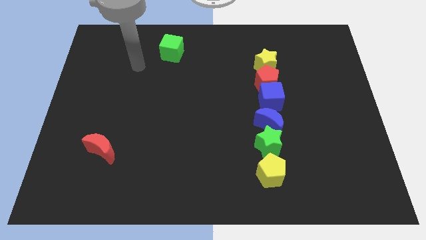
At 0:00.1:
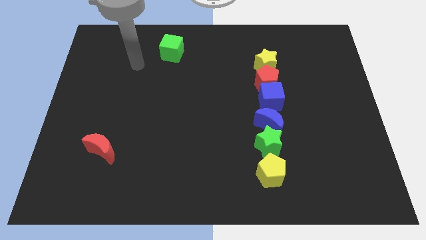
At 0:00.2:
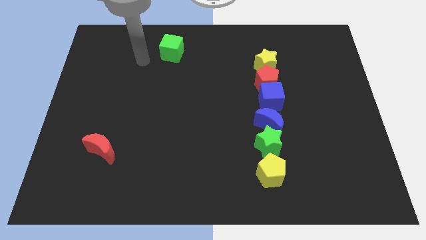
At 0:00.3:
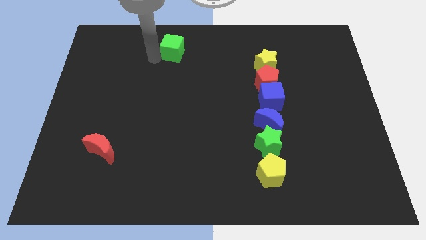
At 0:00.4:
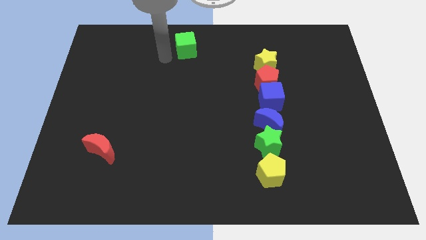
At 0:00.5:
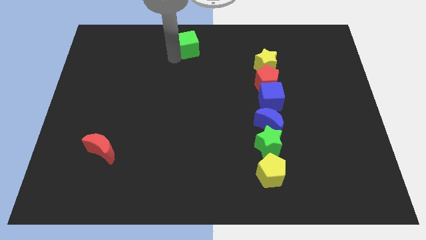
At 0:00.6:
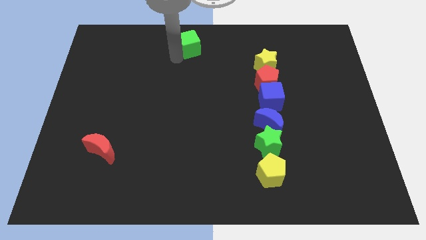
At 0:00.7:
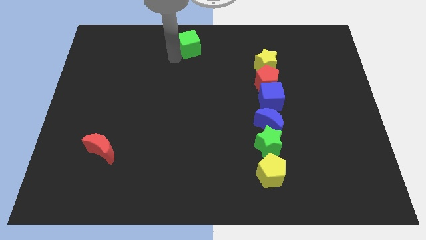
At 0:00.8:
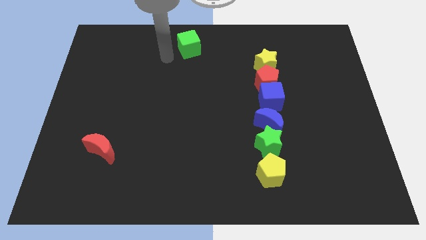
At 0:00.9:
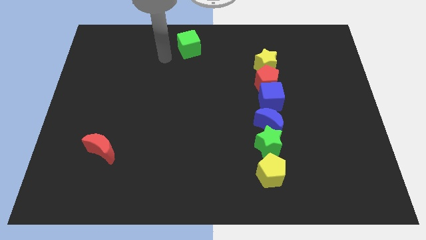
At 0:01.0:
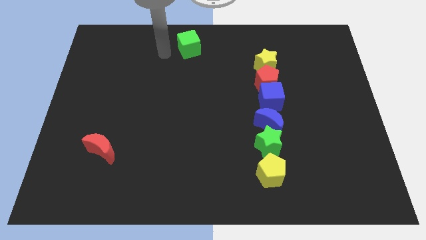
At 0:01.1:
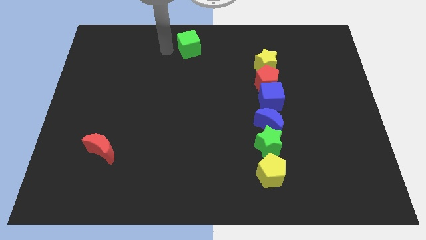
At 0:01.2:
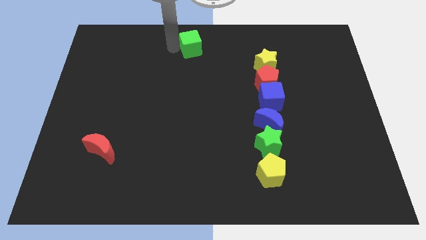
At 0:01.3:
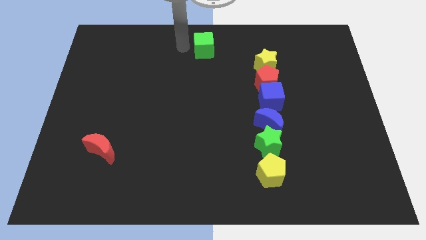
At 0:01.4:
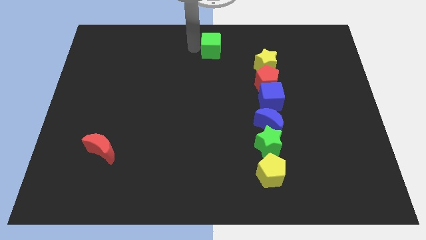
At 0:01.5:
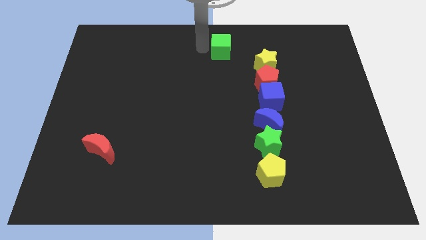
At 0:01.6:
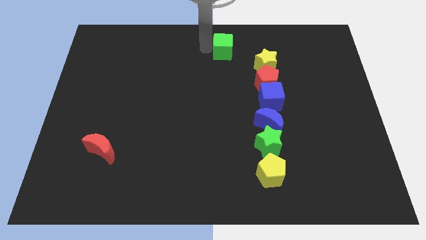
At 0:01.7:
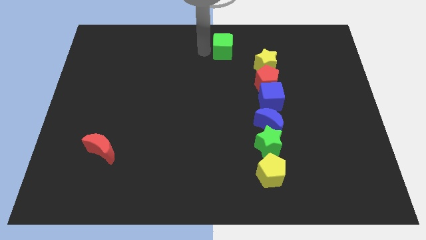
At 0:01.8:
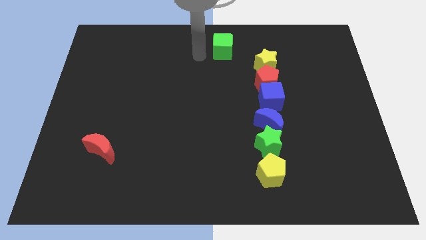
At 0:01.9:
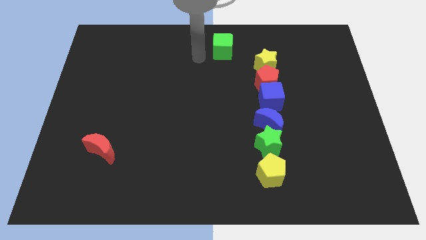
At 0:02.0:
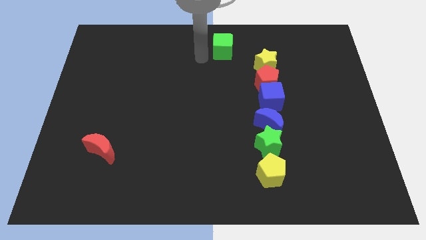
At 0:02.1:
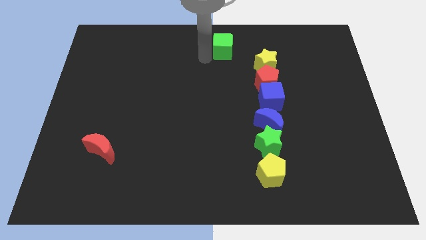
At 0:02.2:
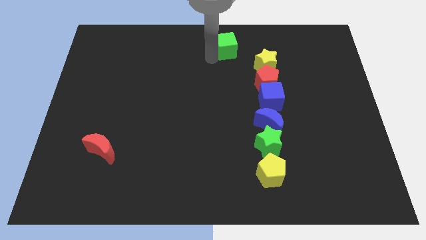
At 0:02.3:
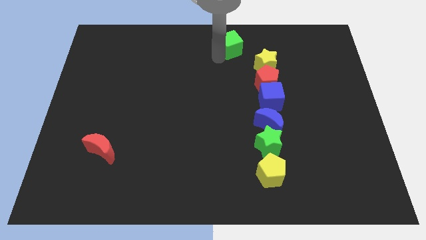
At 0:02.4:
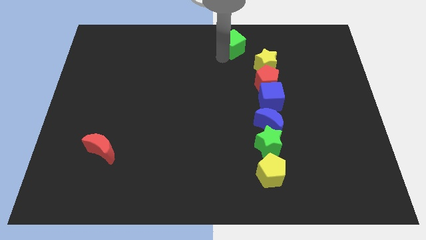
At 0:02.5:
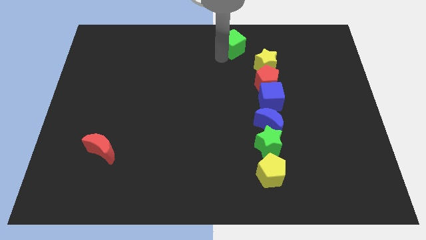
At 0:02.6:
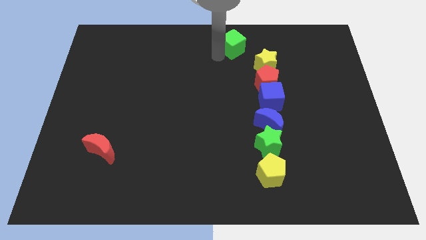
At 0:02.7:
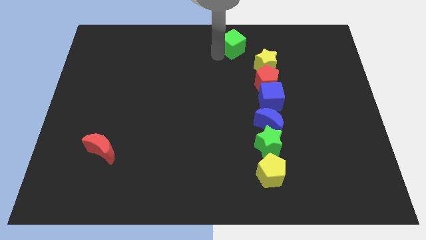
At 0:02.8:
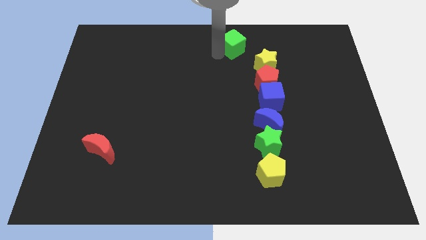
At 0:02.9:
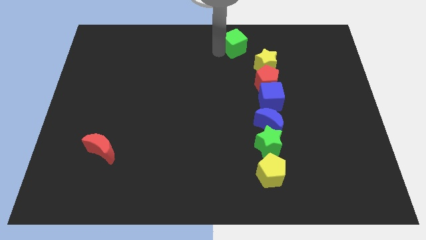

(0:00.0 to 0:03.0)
move the green cube to the top left of the yellow star

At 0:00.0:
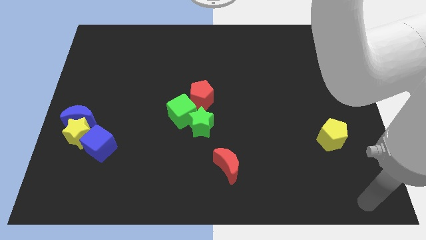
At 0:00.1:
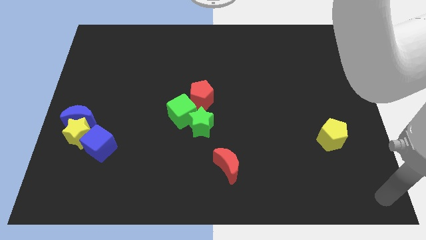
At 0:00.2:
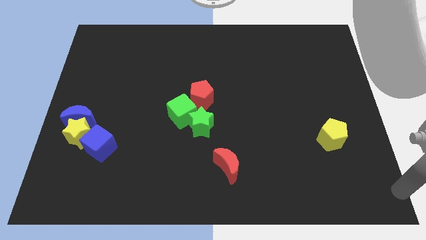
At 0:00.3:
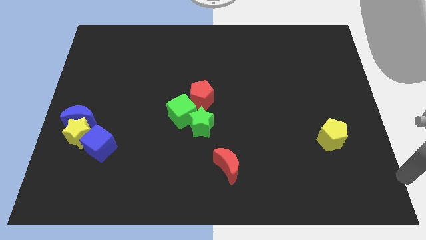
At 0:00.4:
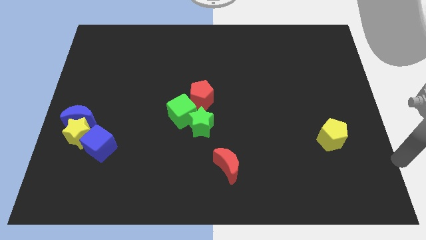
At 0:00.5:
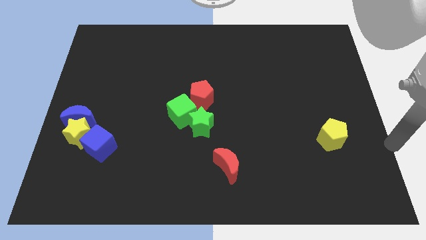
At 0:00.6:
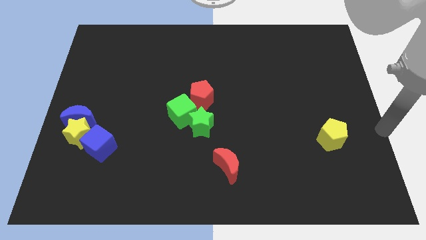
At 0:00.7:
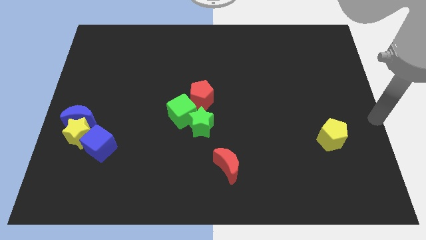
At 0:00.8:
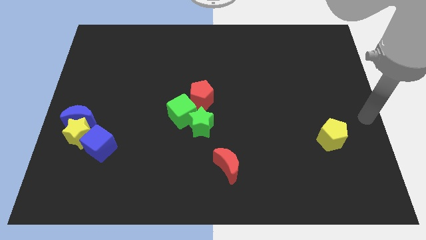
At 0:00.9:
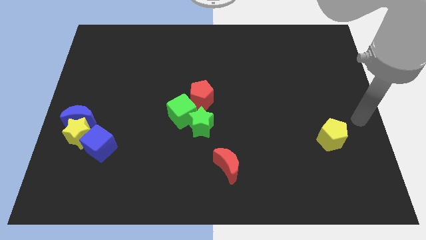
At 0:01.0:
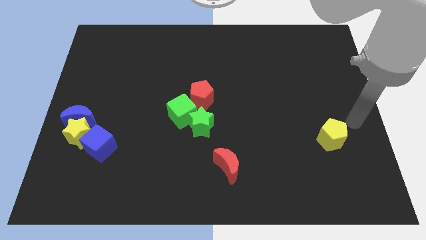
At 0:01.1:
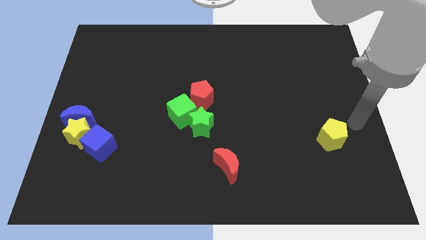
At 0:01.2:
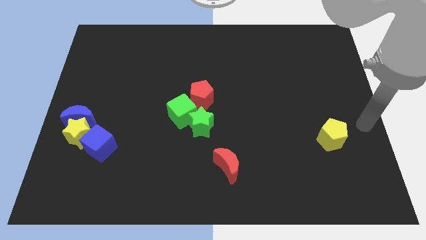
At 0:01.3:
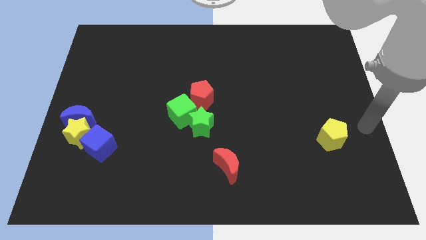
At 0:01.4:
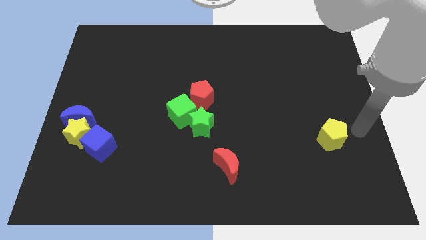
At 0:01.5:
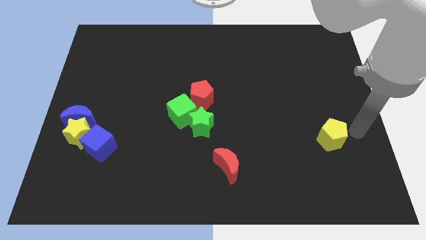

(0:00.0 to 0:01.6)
go near the yellow pentagon

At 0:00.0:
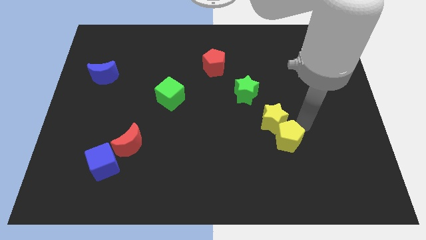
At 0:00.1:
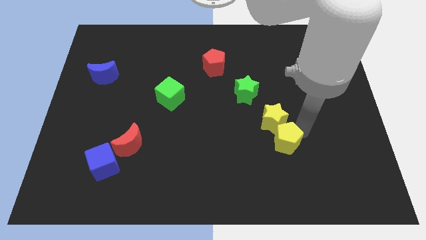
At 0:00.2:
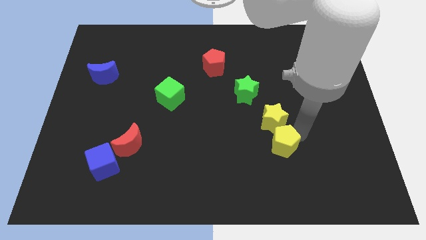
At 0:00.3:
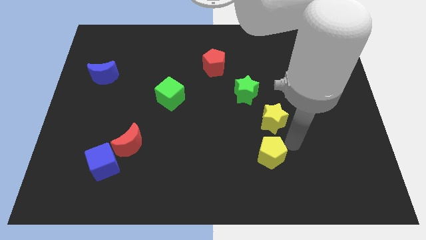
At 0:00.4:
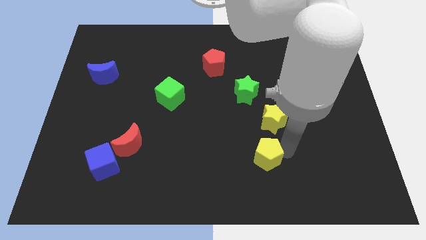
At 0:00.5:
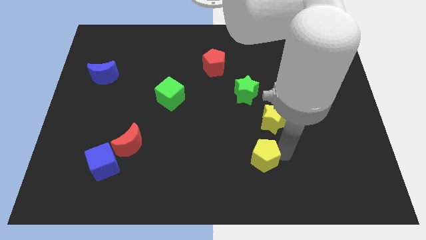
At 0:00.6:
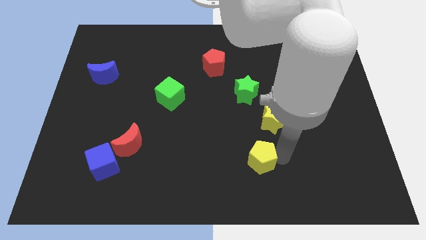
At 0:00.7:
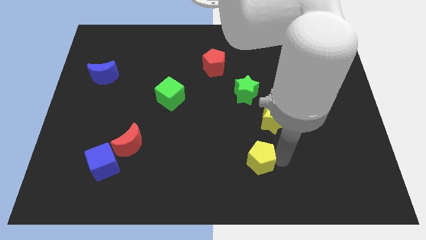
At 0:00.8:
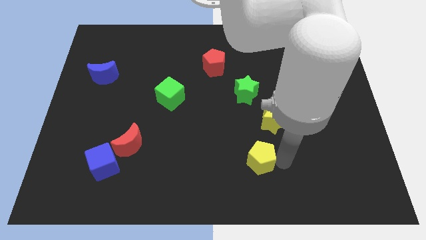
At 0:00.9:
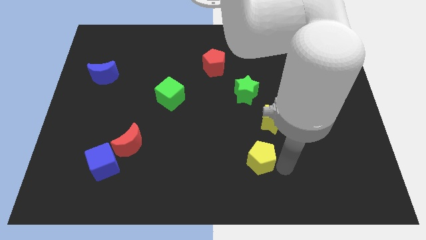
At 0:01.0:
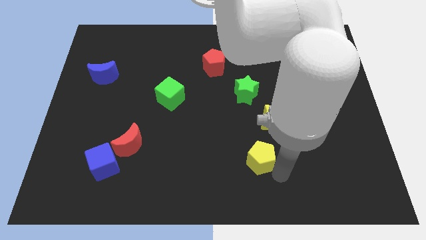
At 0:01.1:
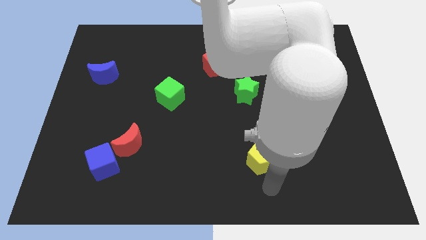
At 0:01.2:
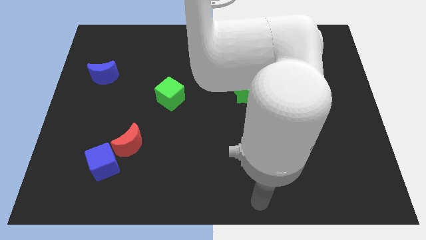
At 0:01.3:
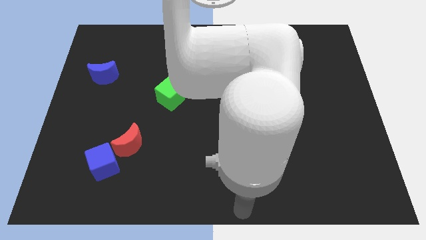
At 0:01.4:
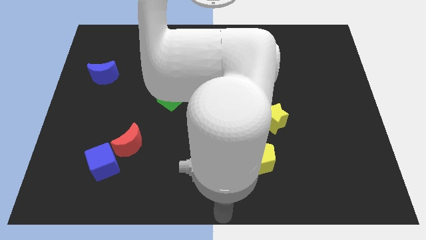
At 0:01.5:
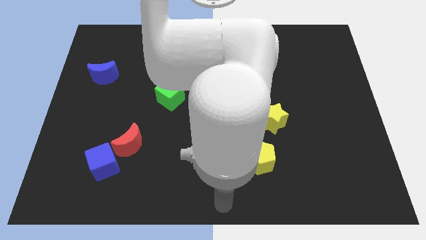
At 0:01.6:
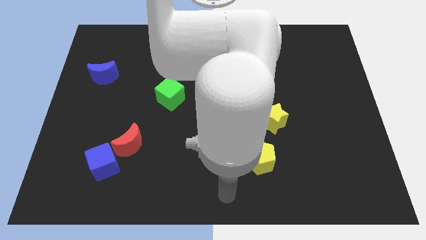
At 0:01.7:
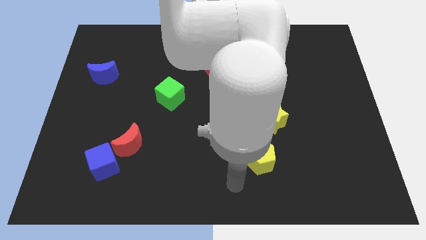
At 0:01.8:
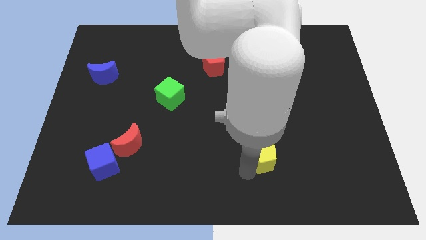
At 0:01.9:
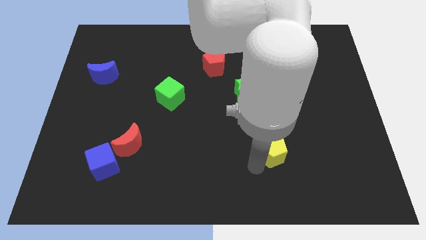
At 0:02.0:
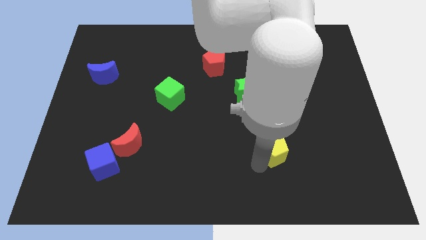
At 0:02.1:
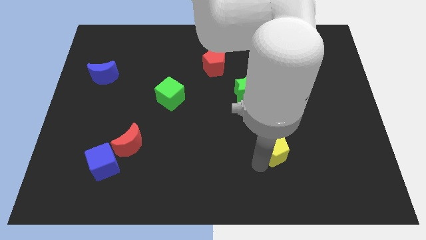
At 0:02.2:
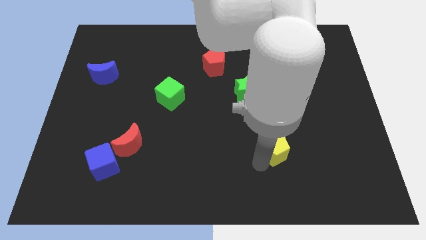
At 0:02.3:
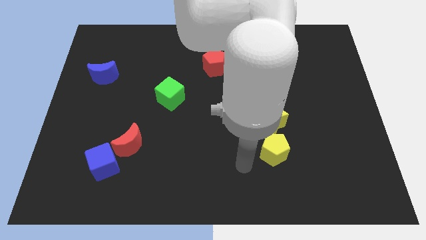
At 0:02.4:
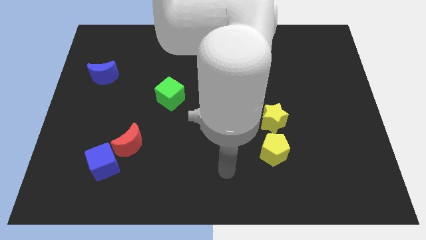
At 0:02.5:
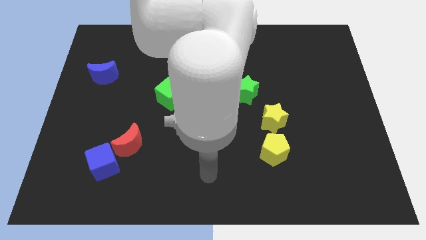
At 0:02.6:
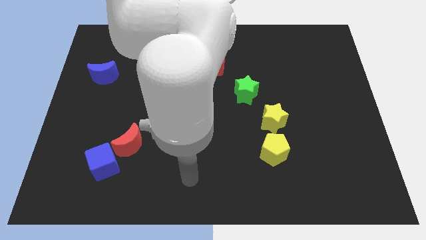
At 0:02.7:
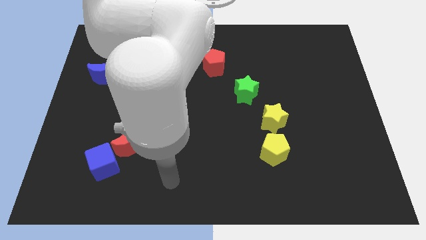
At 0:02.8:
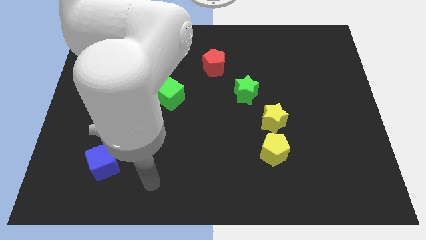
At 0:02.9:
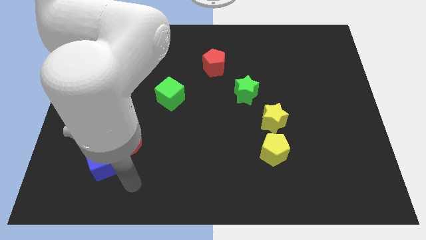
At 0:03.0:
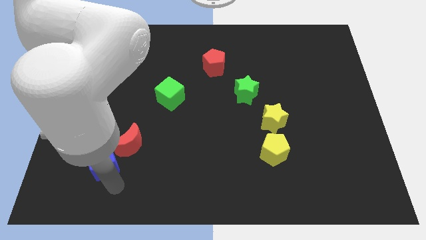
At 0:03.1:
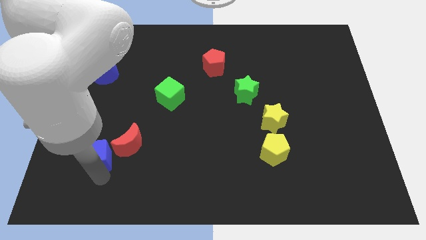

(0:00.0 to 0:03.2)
place the yellow pentagon below the yellow star

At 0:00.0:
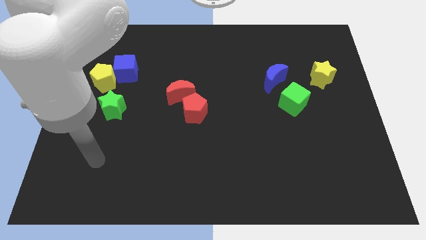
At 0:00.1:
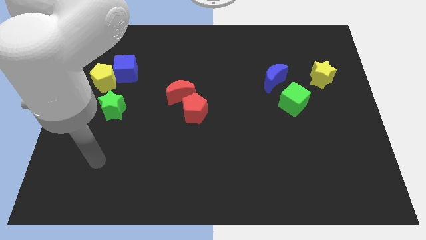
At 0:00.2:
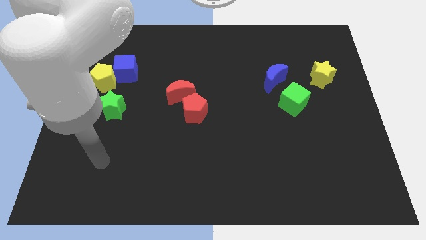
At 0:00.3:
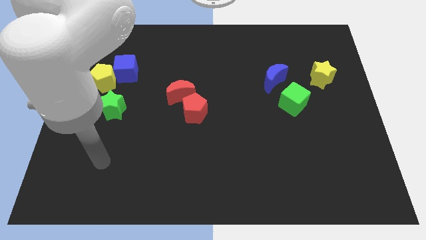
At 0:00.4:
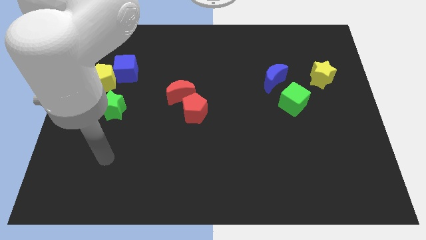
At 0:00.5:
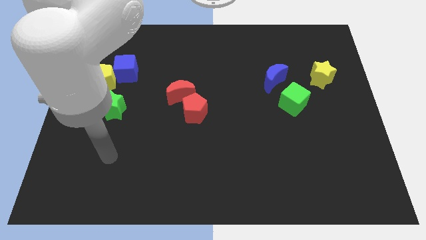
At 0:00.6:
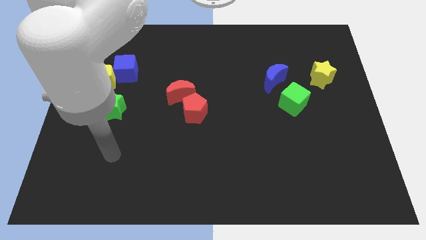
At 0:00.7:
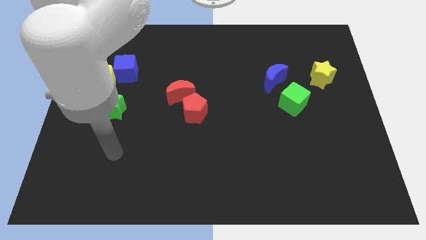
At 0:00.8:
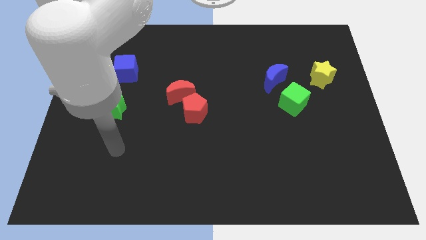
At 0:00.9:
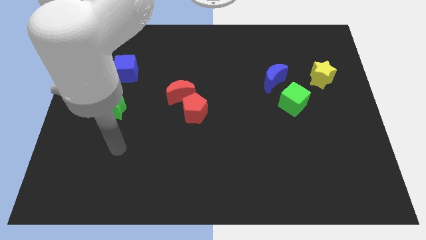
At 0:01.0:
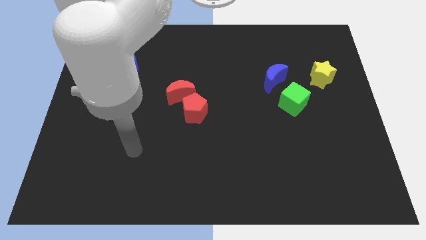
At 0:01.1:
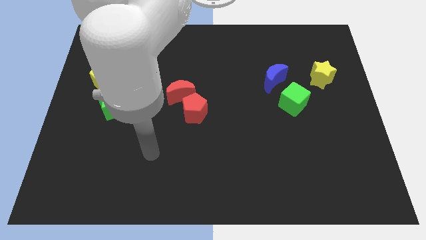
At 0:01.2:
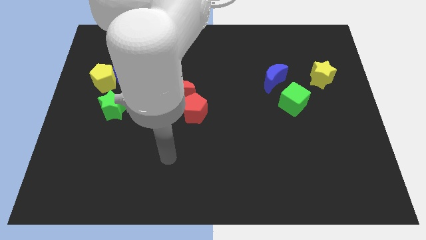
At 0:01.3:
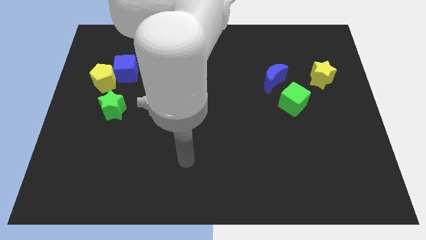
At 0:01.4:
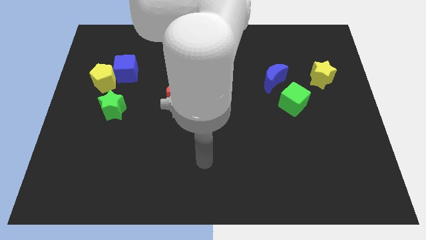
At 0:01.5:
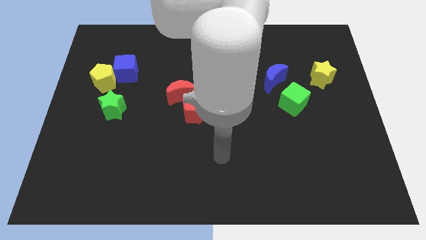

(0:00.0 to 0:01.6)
move your hand towards the right side
